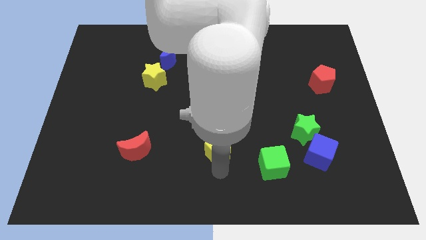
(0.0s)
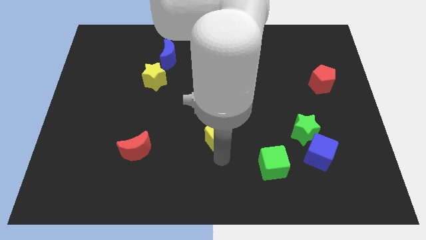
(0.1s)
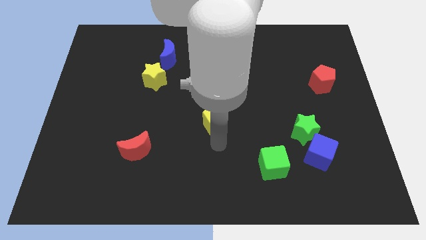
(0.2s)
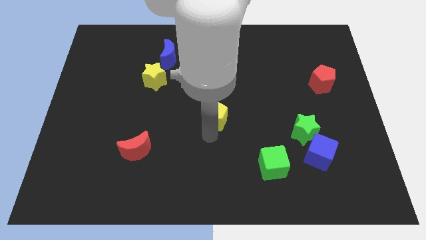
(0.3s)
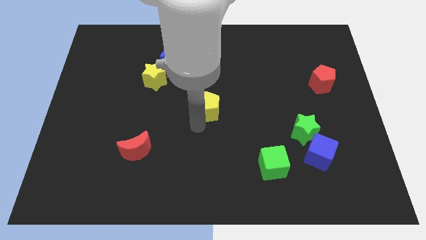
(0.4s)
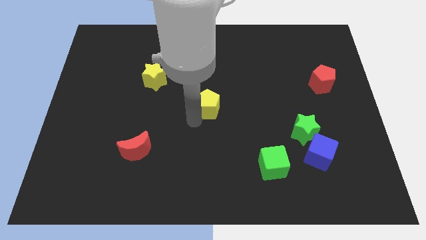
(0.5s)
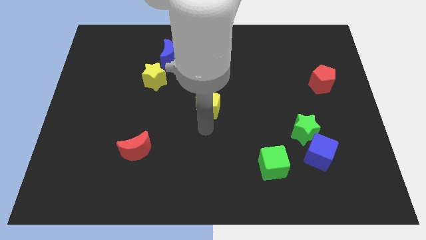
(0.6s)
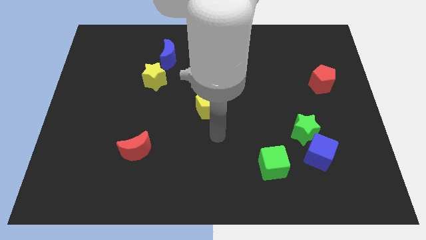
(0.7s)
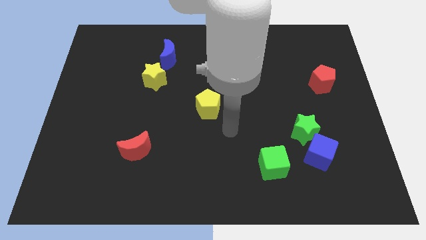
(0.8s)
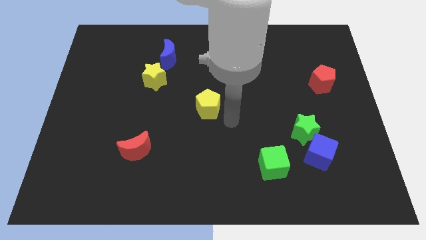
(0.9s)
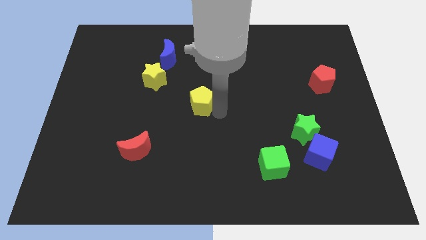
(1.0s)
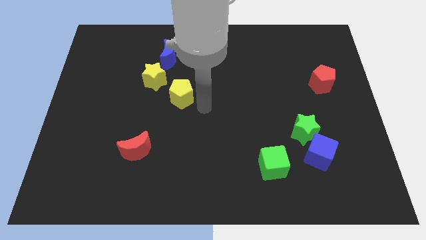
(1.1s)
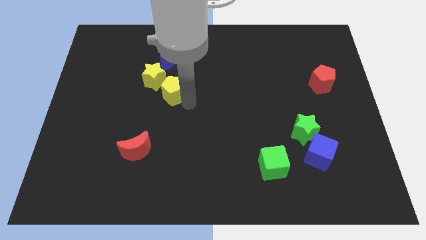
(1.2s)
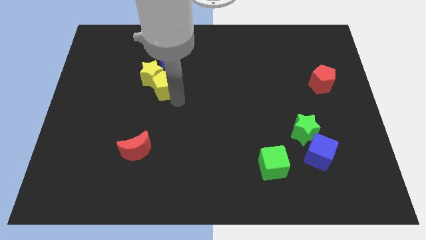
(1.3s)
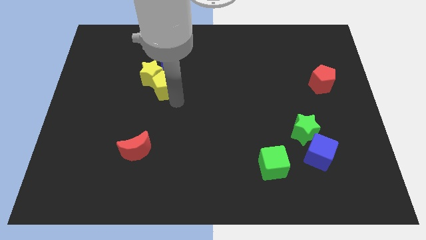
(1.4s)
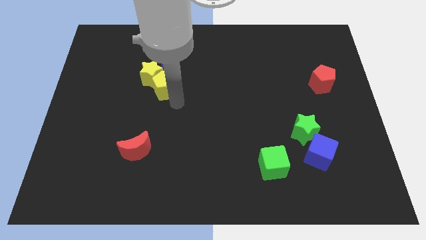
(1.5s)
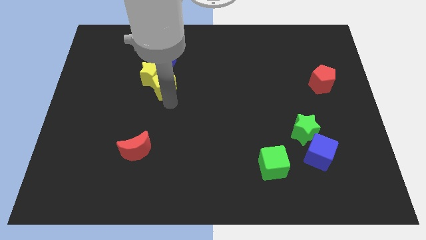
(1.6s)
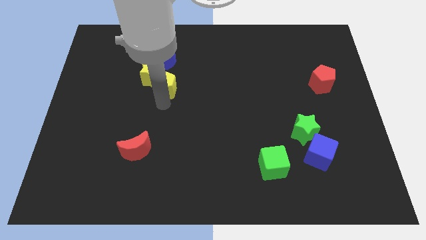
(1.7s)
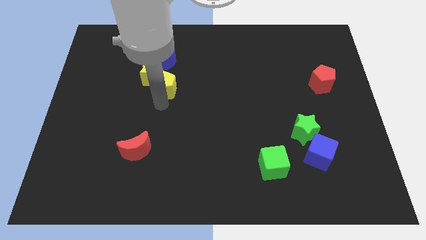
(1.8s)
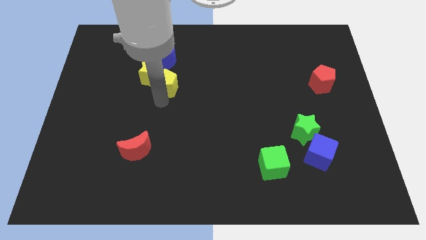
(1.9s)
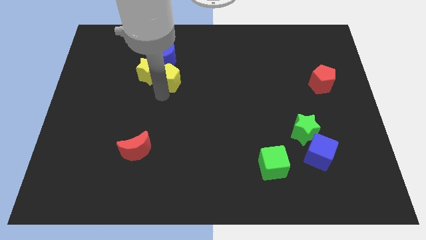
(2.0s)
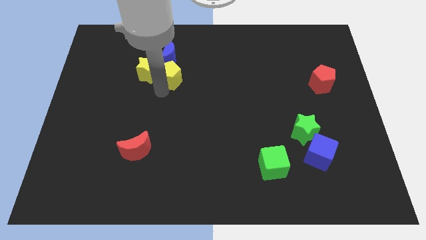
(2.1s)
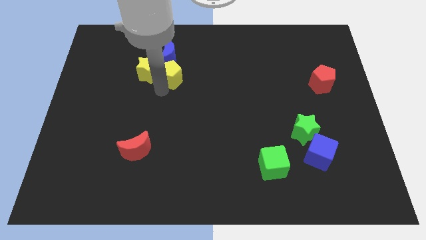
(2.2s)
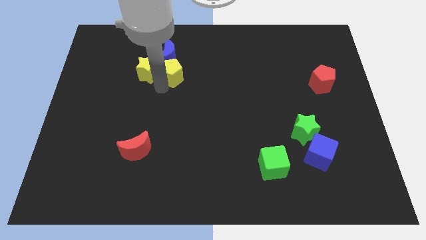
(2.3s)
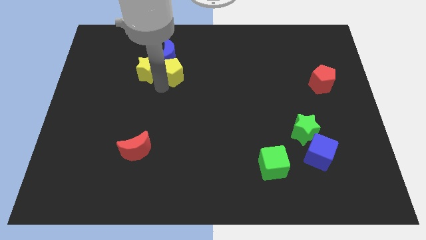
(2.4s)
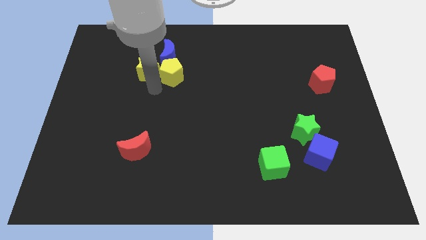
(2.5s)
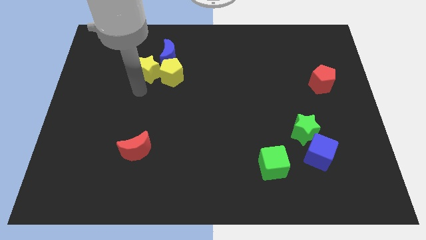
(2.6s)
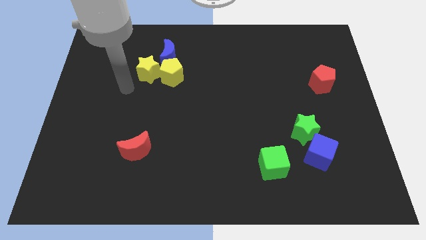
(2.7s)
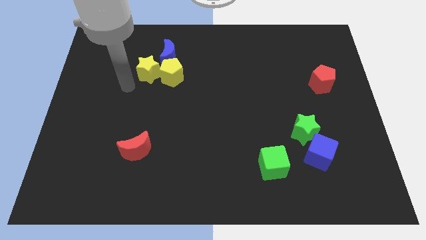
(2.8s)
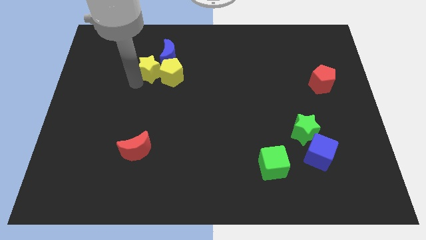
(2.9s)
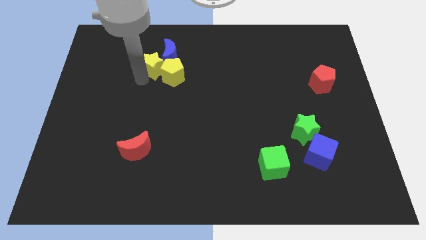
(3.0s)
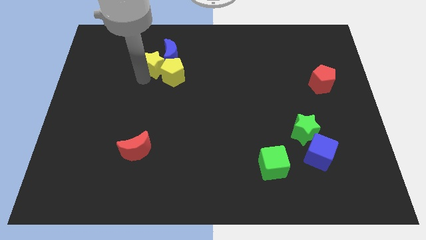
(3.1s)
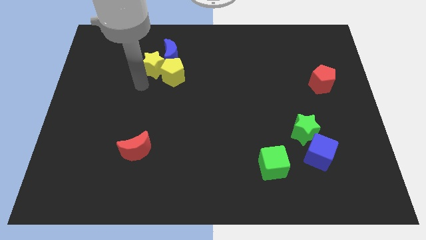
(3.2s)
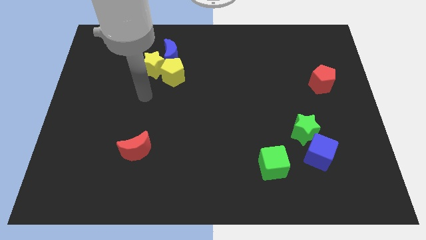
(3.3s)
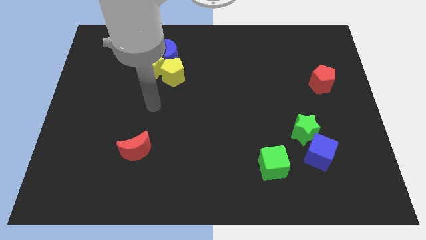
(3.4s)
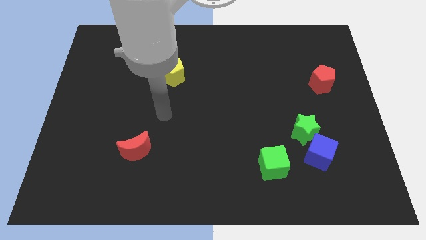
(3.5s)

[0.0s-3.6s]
slide both the yellow blocks into the blue crescent

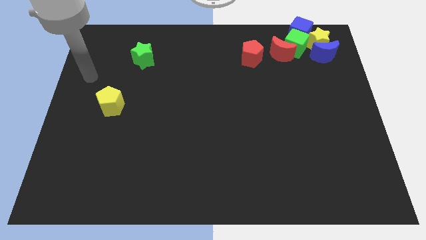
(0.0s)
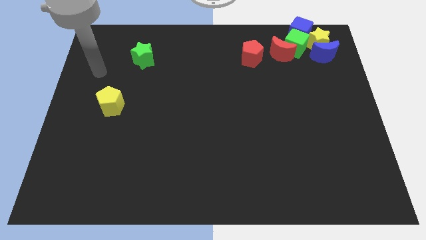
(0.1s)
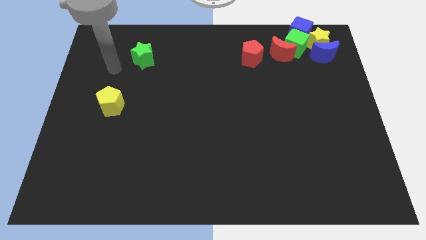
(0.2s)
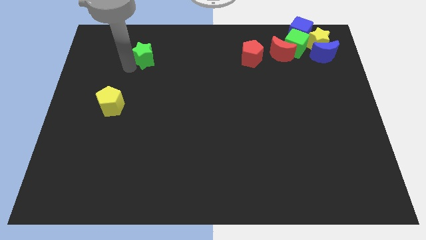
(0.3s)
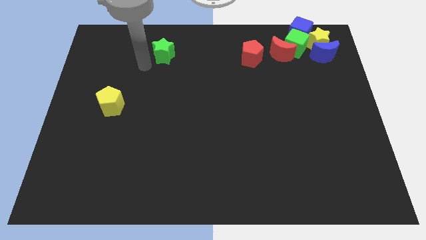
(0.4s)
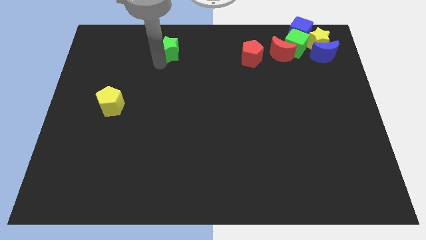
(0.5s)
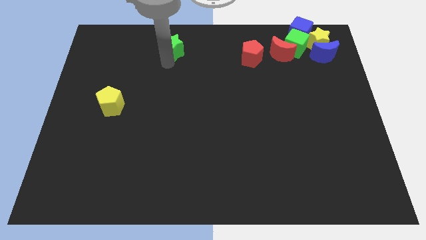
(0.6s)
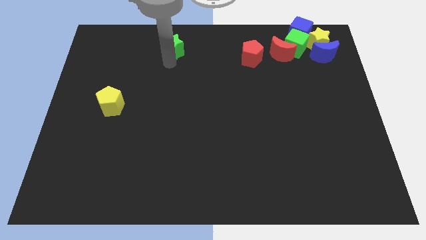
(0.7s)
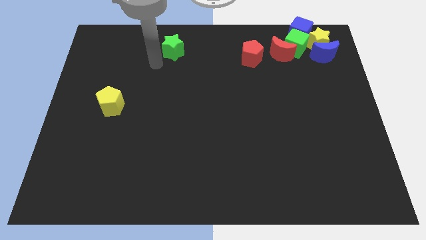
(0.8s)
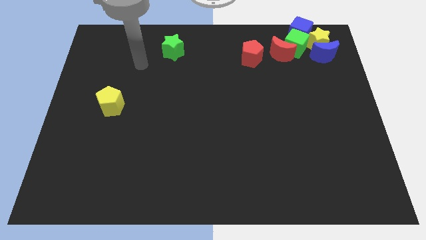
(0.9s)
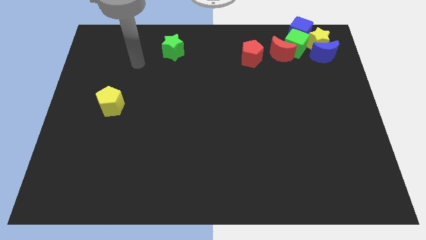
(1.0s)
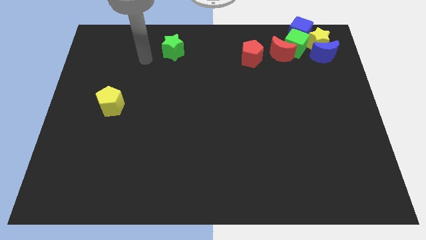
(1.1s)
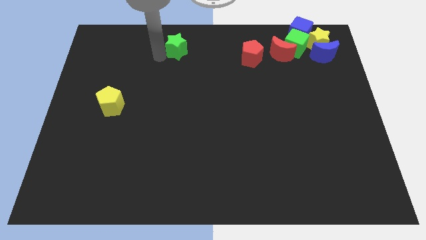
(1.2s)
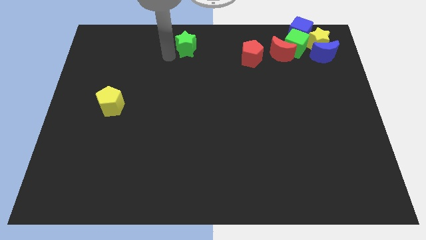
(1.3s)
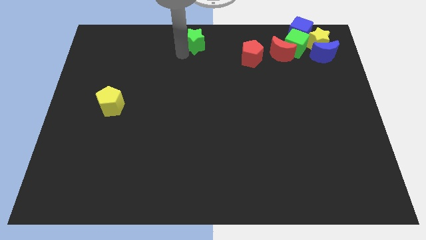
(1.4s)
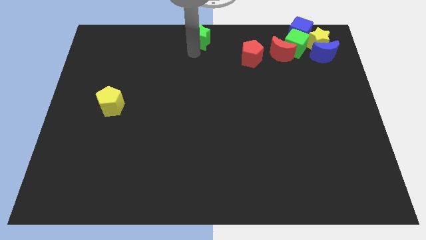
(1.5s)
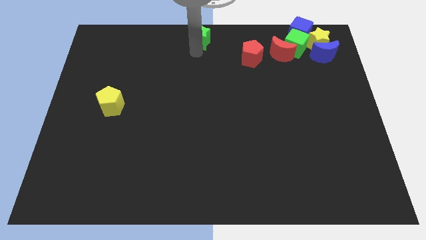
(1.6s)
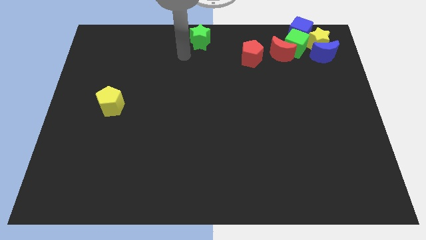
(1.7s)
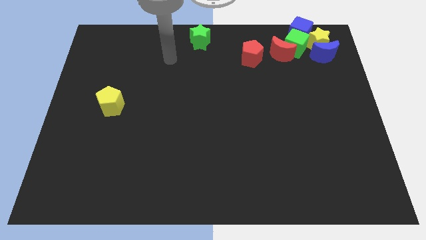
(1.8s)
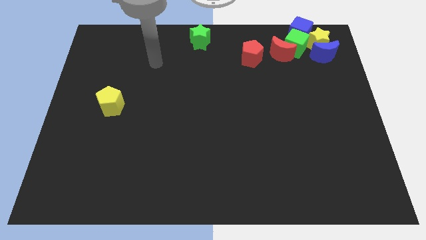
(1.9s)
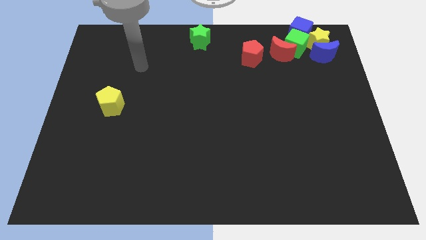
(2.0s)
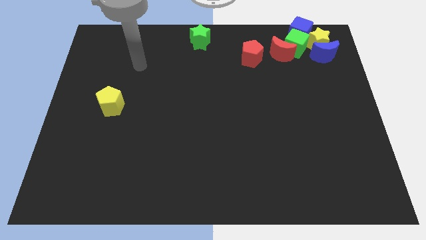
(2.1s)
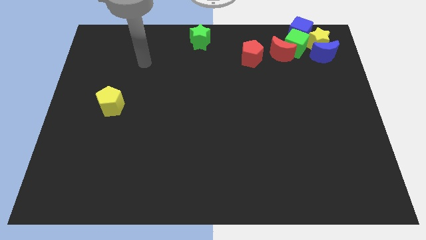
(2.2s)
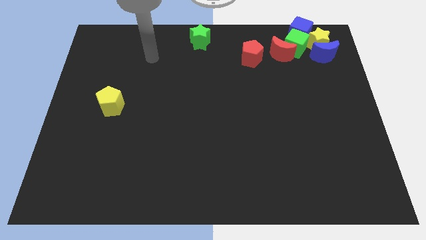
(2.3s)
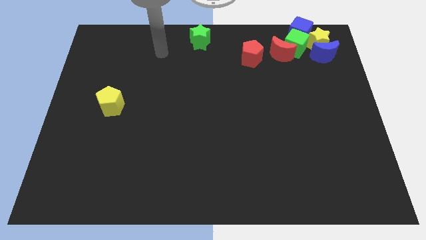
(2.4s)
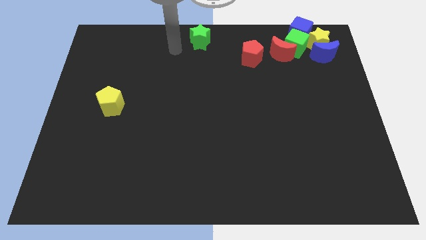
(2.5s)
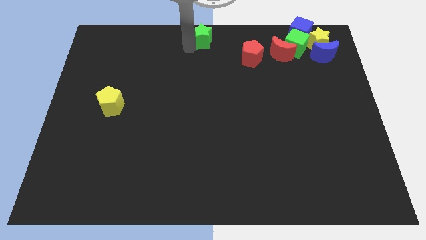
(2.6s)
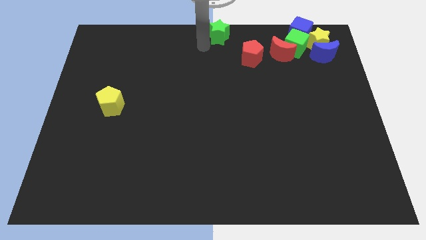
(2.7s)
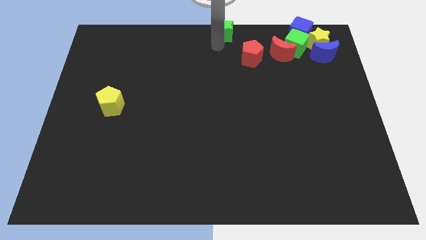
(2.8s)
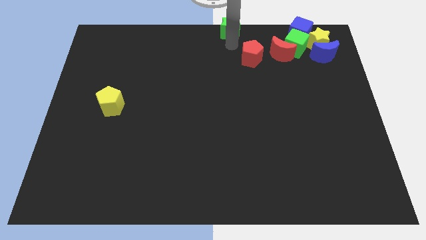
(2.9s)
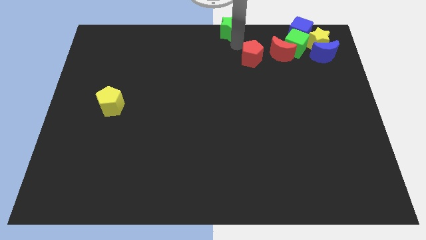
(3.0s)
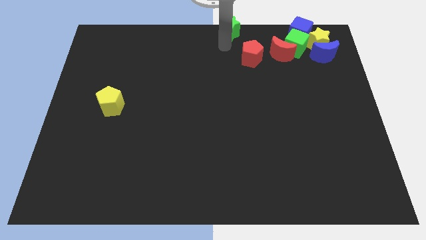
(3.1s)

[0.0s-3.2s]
place green star to the top center

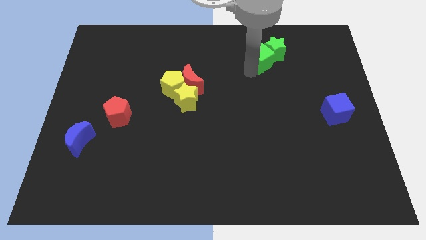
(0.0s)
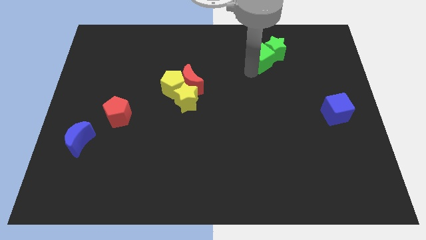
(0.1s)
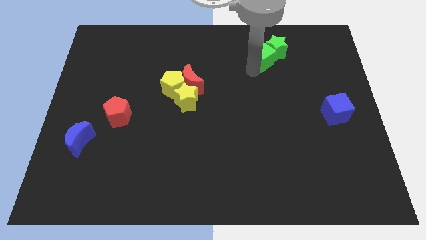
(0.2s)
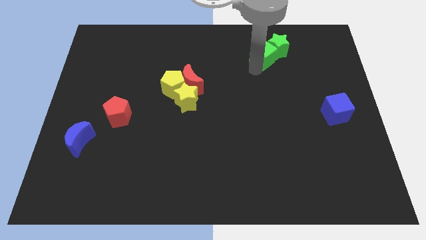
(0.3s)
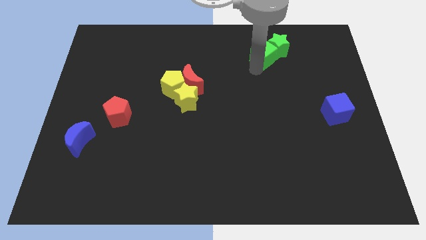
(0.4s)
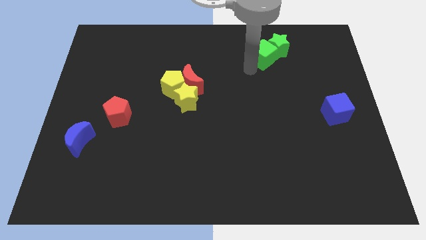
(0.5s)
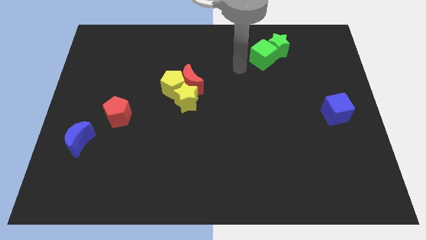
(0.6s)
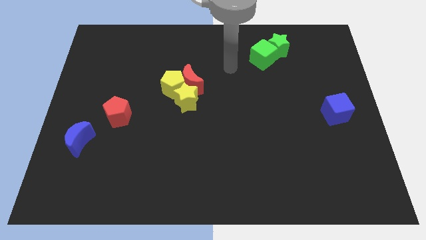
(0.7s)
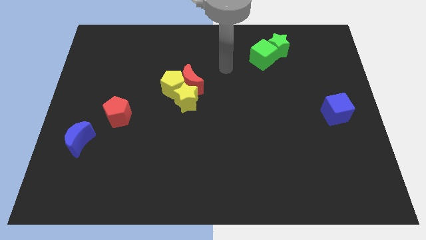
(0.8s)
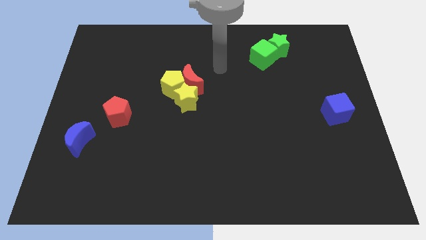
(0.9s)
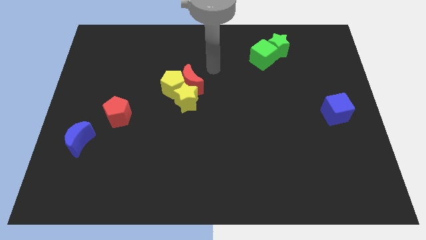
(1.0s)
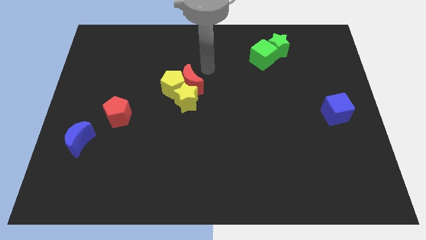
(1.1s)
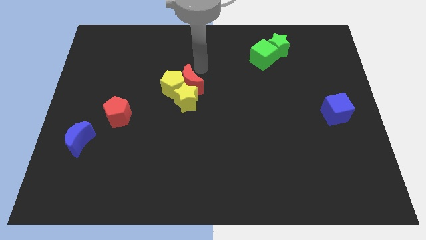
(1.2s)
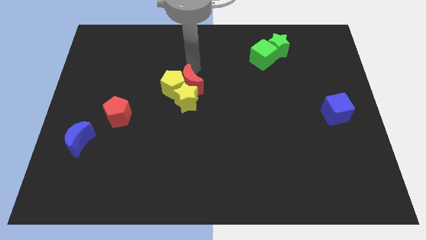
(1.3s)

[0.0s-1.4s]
move the green cube into the green star

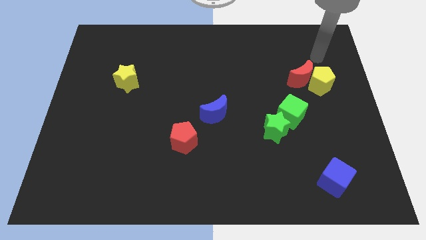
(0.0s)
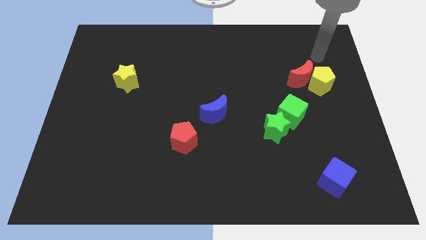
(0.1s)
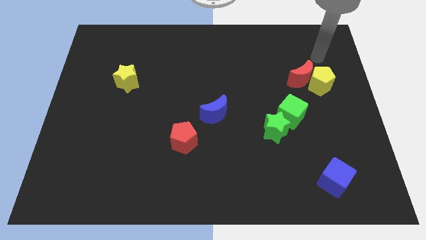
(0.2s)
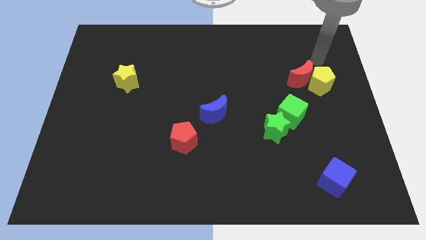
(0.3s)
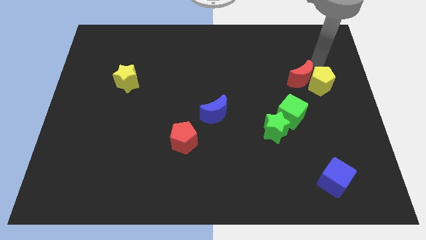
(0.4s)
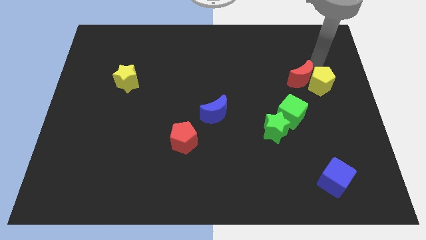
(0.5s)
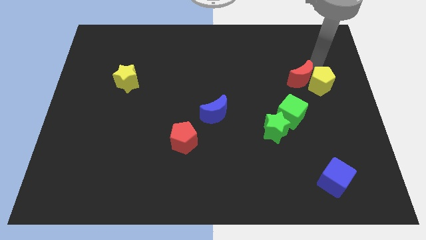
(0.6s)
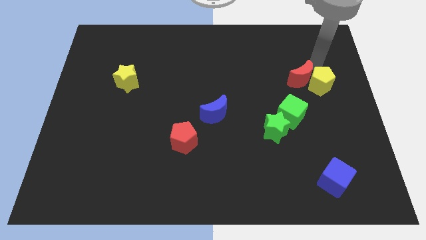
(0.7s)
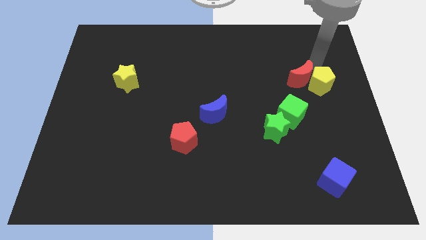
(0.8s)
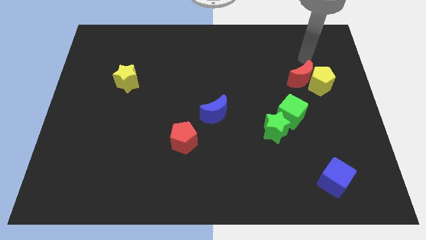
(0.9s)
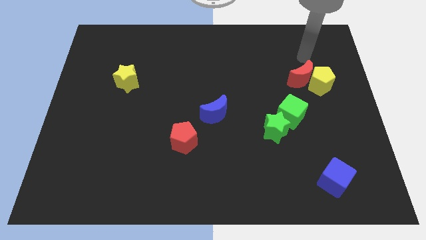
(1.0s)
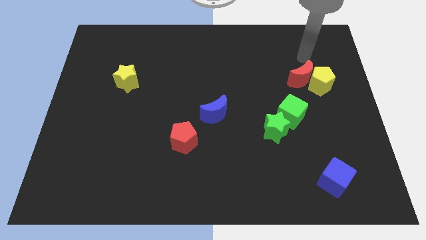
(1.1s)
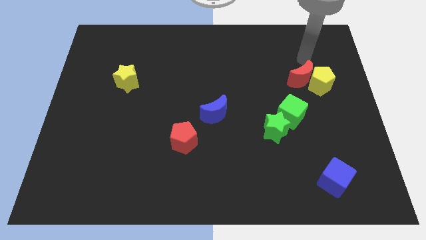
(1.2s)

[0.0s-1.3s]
point your arm at the top of the red crescent
